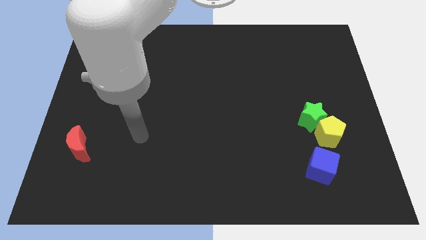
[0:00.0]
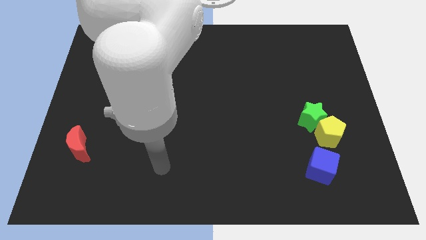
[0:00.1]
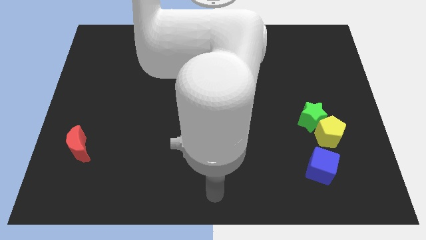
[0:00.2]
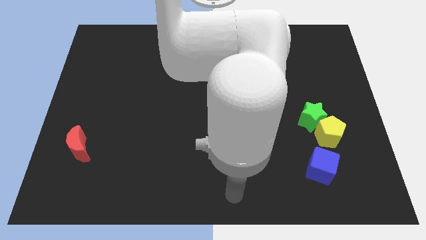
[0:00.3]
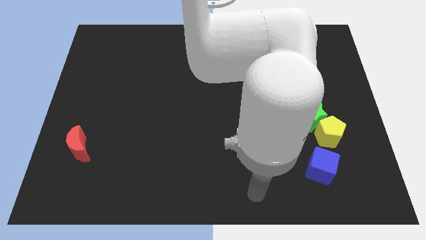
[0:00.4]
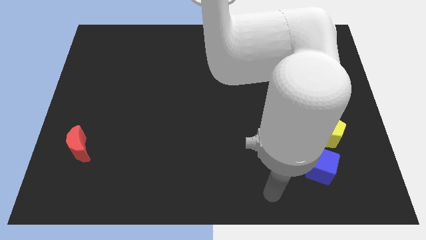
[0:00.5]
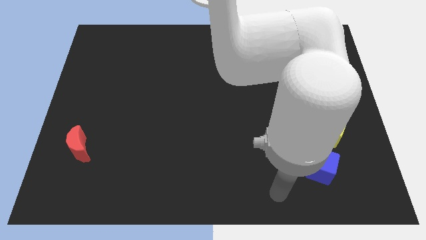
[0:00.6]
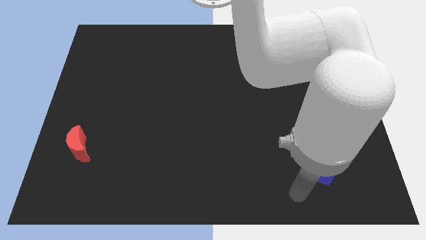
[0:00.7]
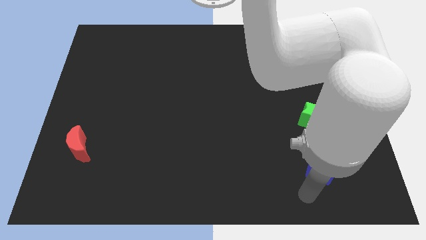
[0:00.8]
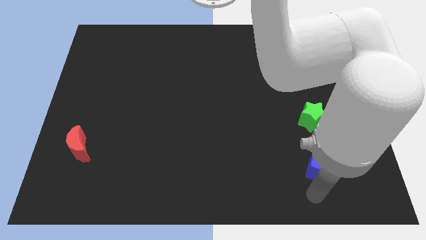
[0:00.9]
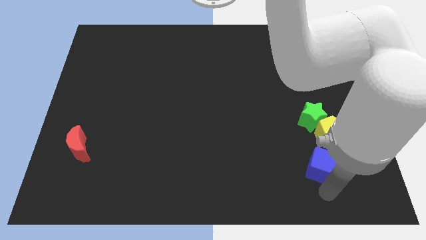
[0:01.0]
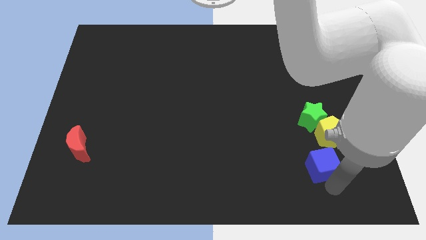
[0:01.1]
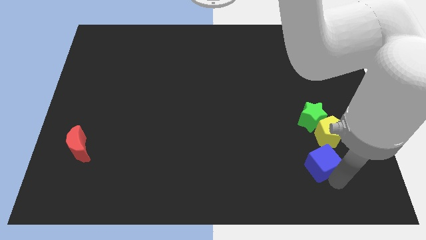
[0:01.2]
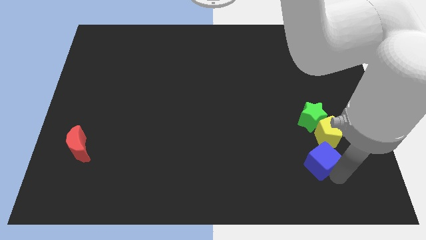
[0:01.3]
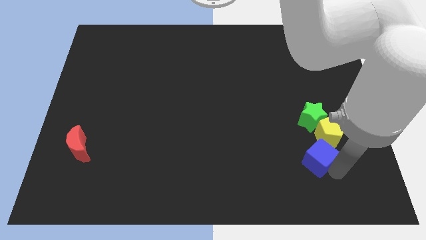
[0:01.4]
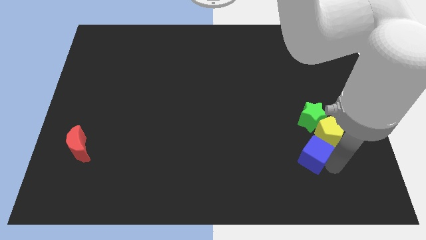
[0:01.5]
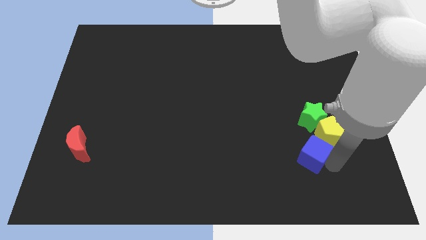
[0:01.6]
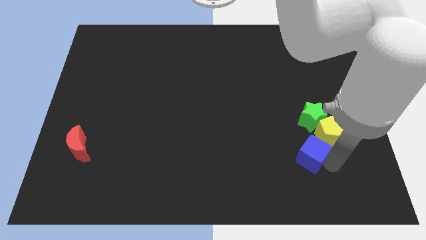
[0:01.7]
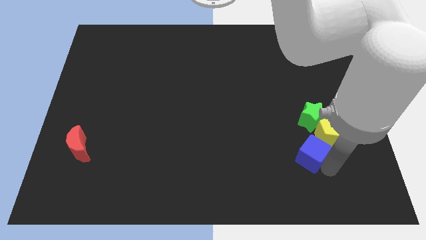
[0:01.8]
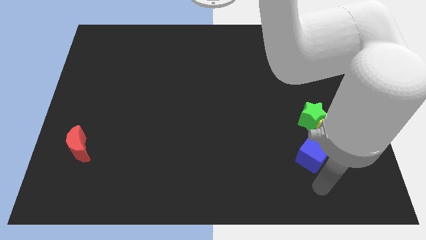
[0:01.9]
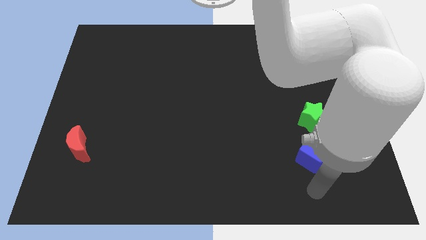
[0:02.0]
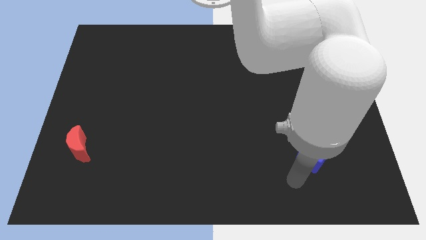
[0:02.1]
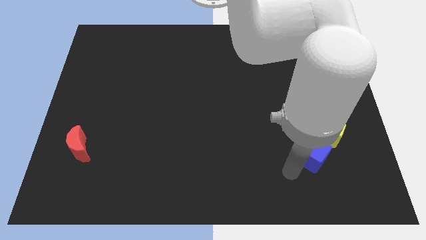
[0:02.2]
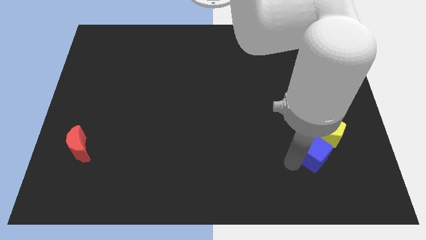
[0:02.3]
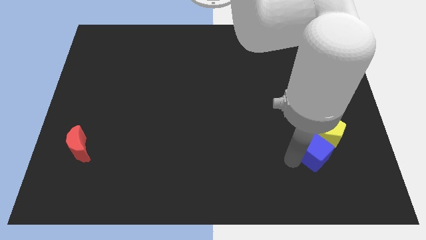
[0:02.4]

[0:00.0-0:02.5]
slide the cube next to the yellow pentagon

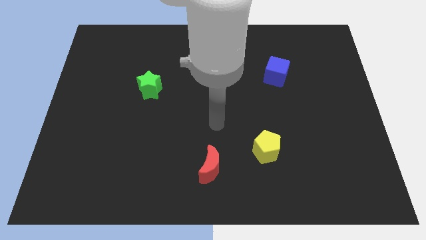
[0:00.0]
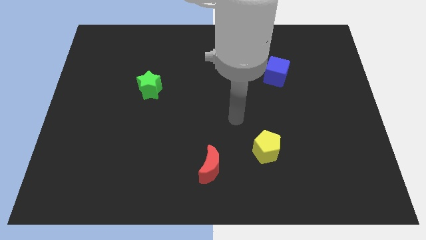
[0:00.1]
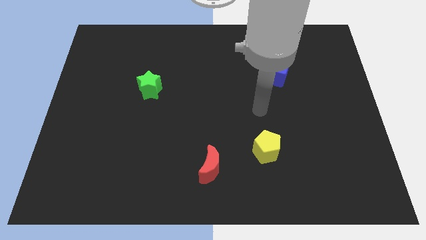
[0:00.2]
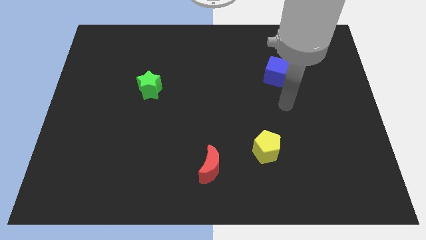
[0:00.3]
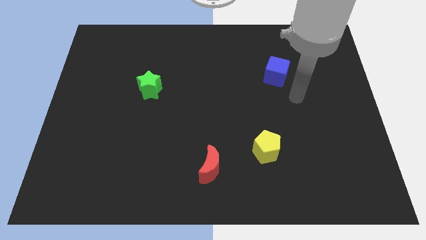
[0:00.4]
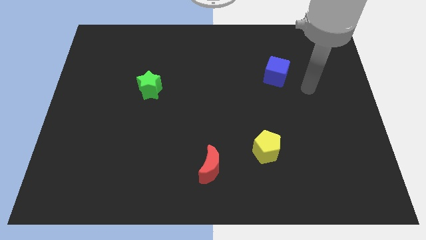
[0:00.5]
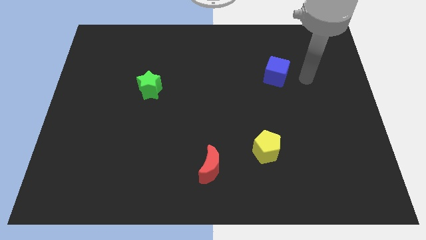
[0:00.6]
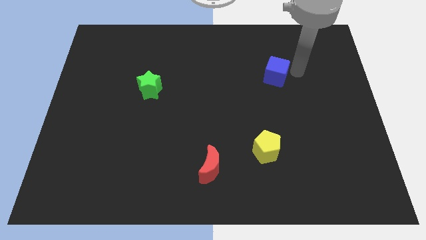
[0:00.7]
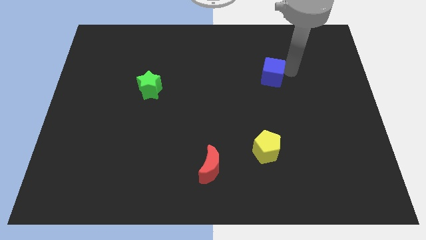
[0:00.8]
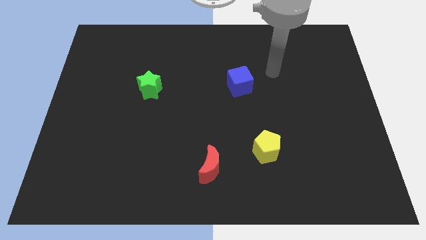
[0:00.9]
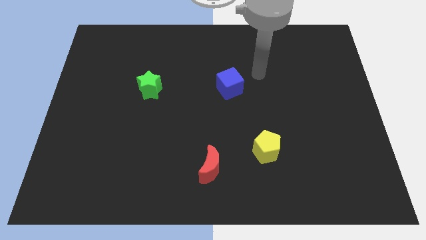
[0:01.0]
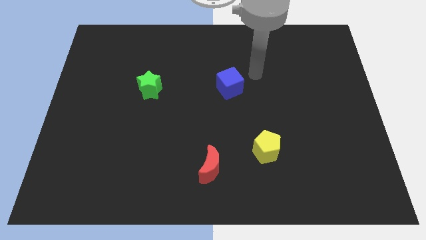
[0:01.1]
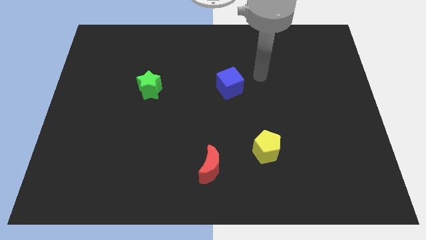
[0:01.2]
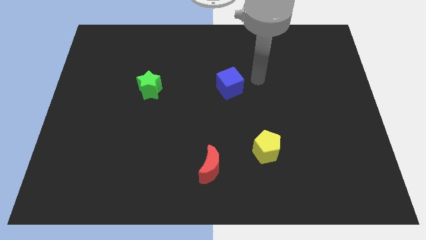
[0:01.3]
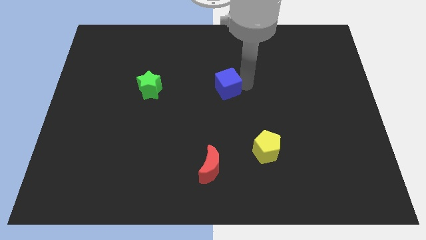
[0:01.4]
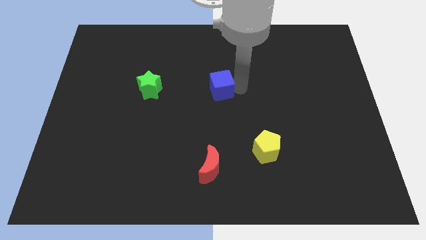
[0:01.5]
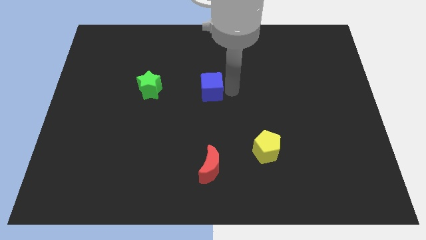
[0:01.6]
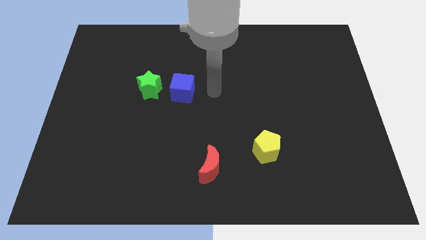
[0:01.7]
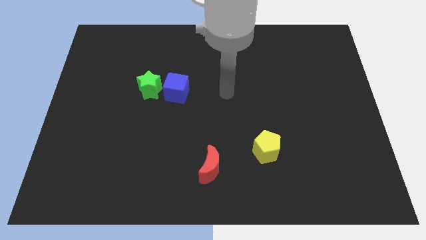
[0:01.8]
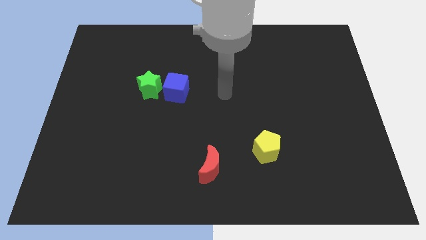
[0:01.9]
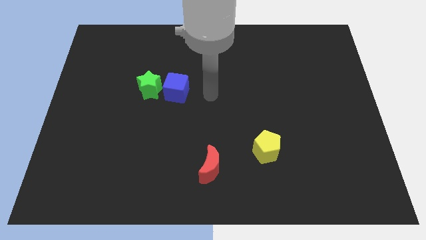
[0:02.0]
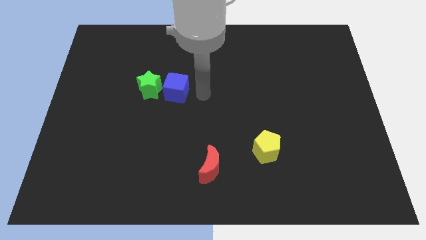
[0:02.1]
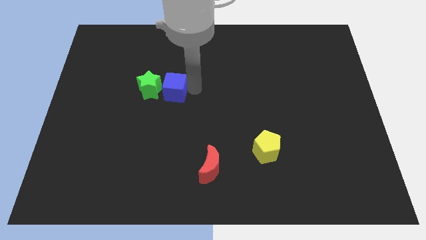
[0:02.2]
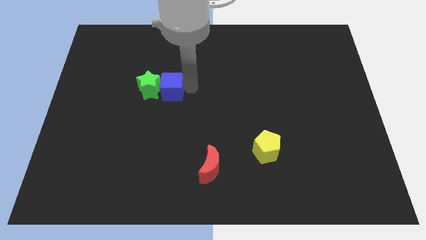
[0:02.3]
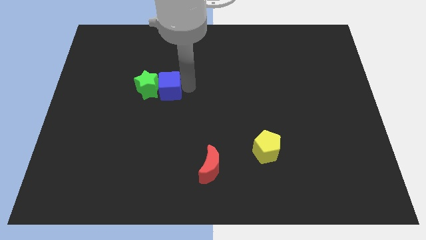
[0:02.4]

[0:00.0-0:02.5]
push the blue block towards the star

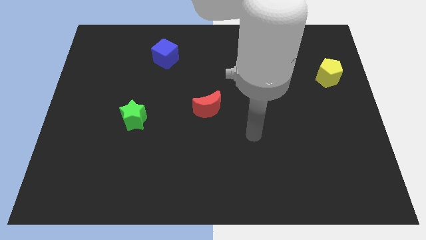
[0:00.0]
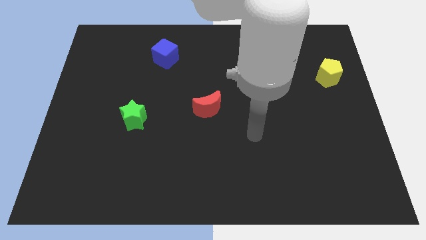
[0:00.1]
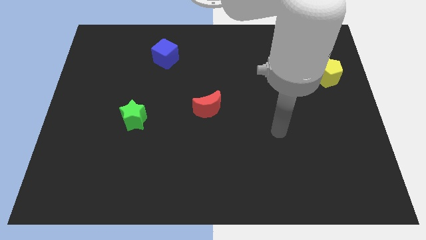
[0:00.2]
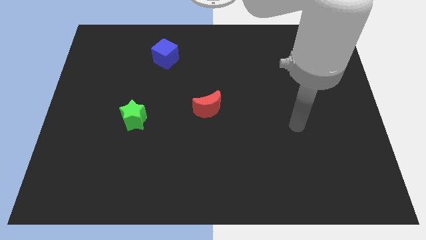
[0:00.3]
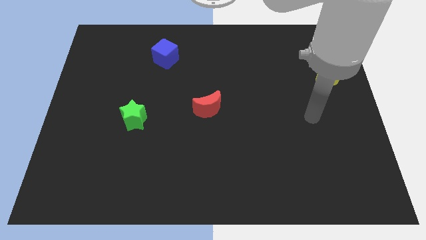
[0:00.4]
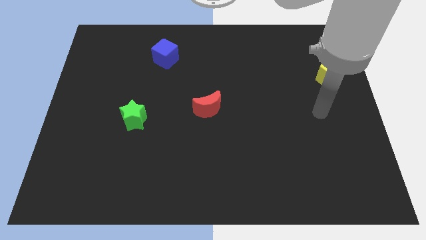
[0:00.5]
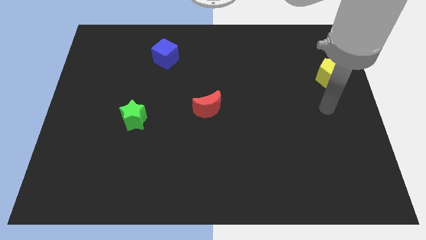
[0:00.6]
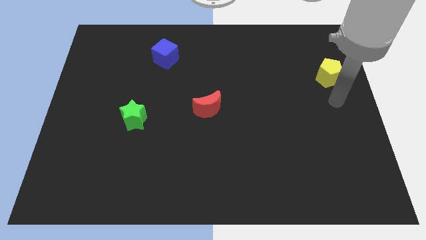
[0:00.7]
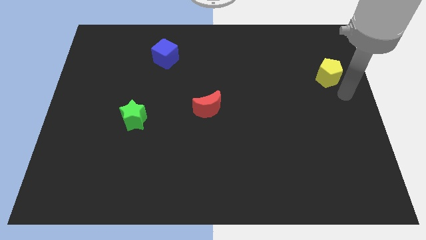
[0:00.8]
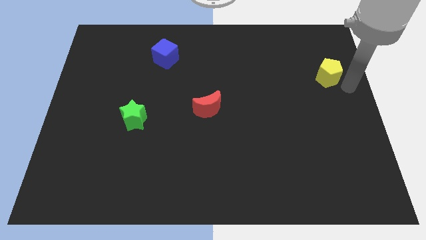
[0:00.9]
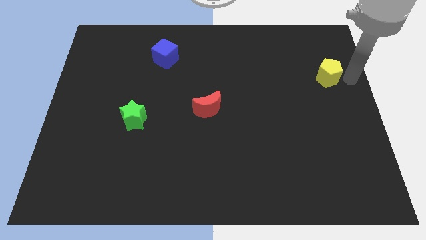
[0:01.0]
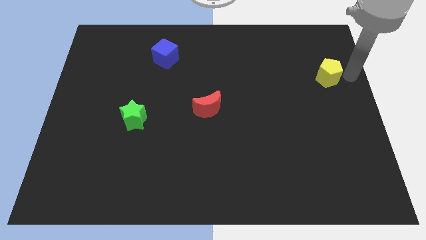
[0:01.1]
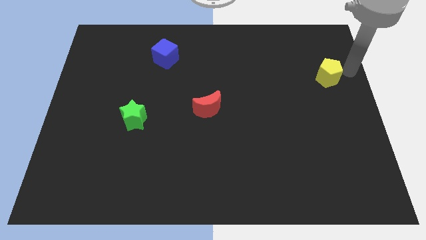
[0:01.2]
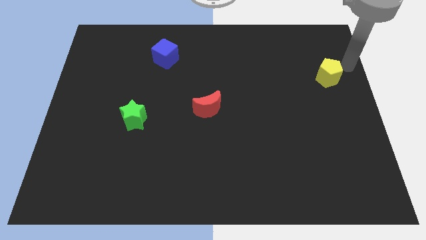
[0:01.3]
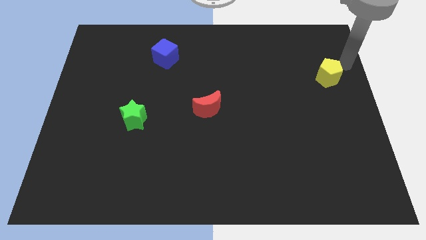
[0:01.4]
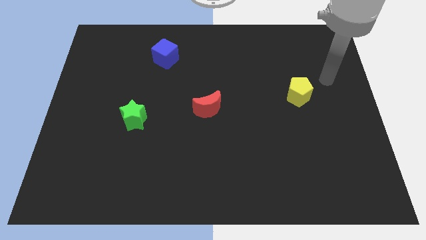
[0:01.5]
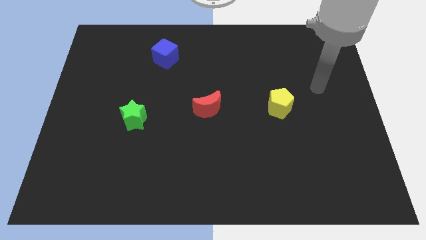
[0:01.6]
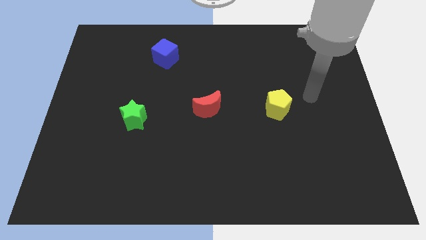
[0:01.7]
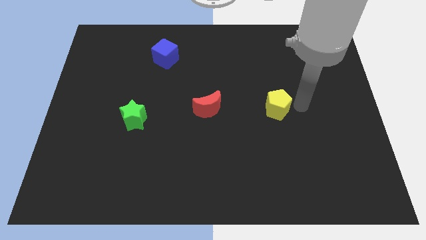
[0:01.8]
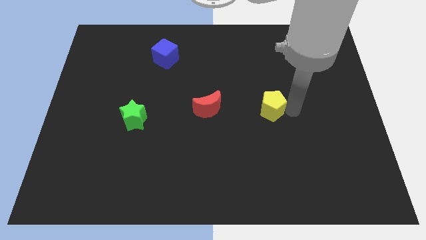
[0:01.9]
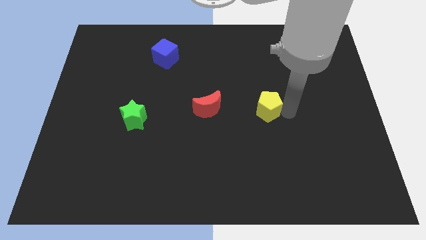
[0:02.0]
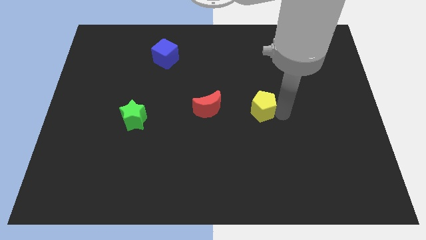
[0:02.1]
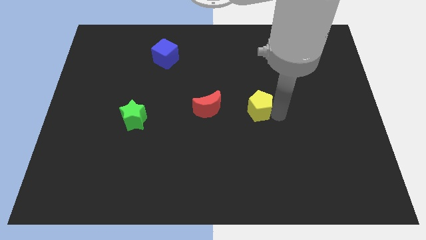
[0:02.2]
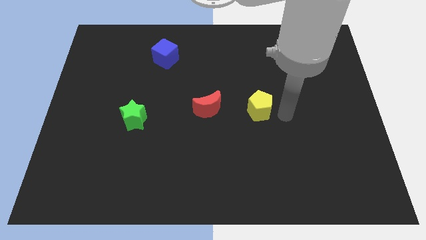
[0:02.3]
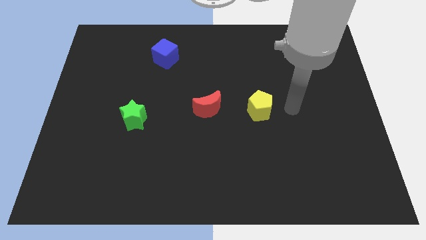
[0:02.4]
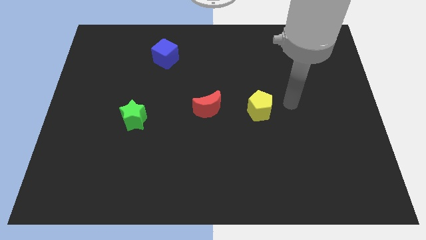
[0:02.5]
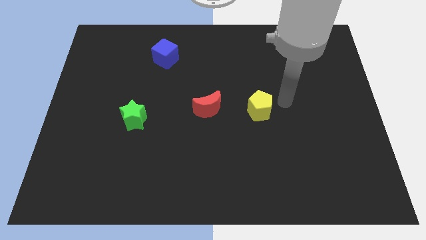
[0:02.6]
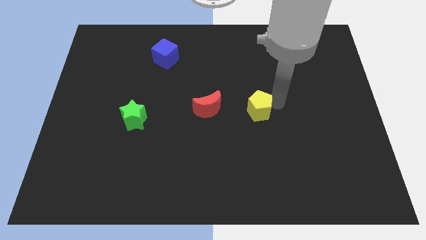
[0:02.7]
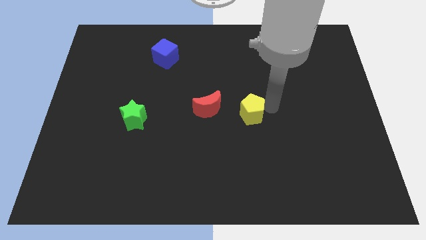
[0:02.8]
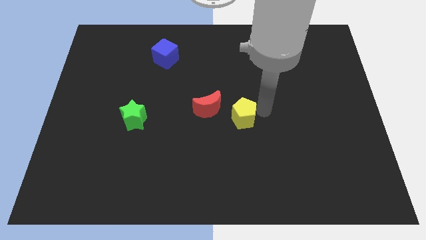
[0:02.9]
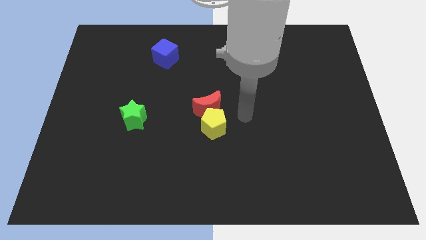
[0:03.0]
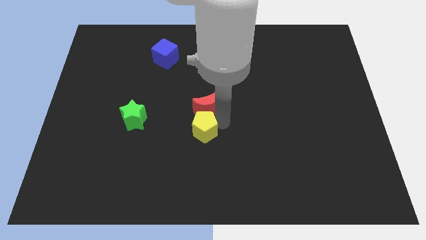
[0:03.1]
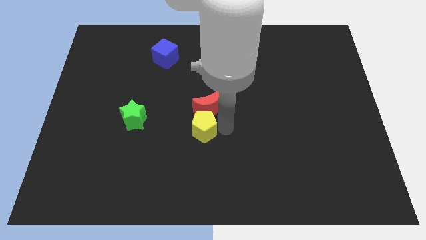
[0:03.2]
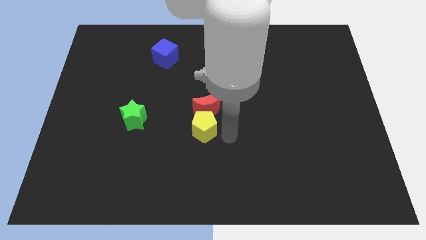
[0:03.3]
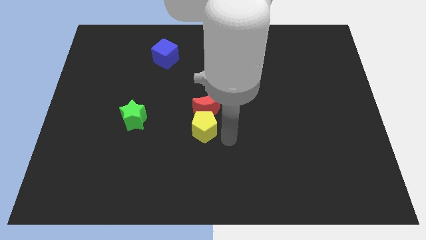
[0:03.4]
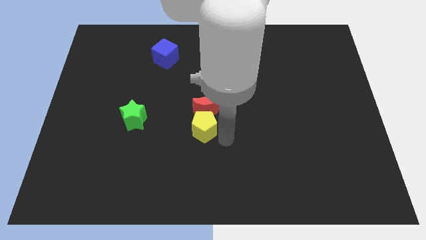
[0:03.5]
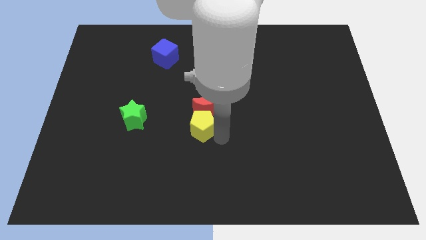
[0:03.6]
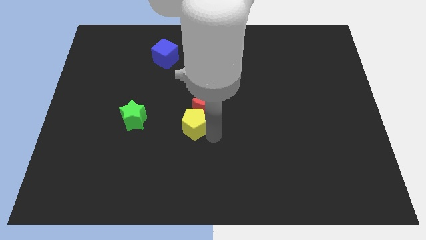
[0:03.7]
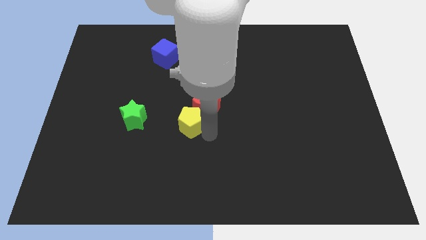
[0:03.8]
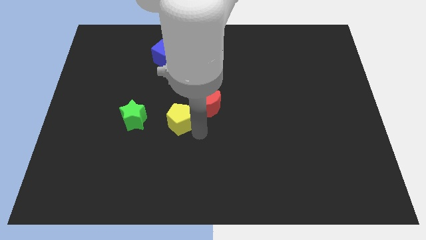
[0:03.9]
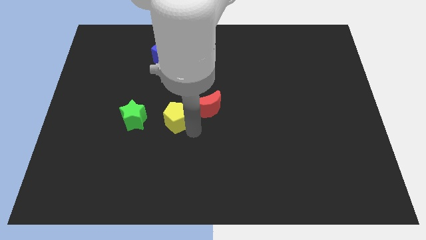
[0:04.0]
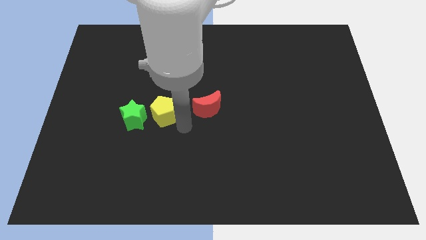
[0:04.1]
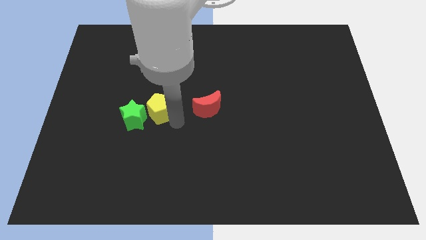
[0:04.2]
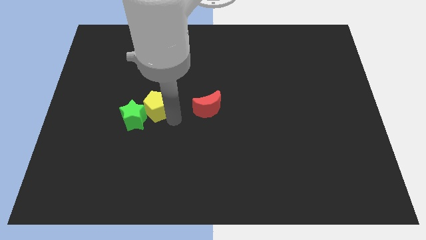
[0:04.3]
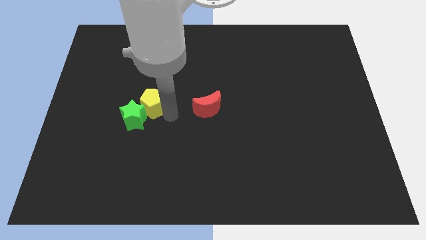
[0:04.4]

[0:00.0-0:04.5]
move the yellow pentagon close to the green block
